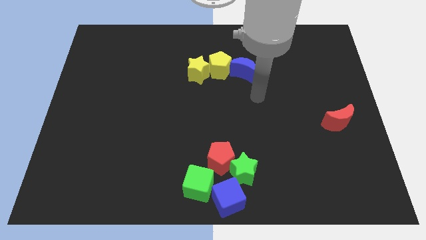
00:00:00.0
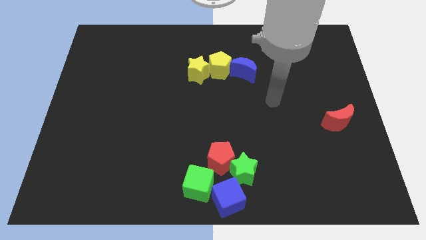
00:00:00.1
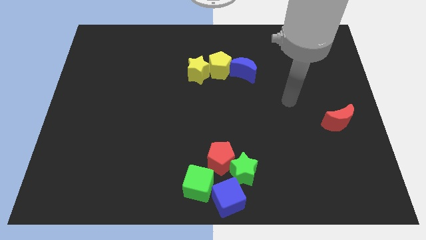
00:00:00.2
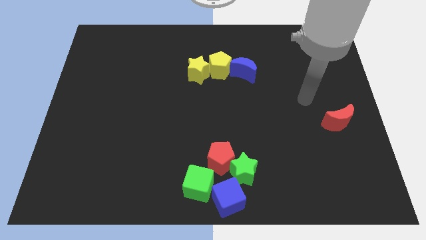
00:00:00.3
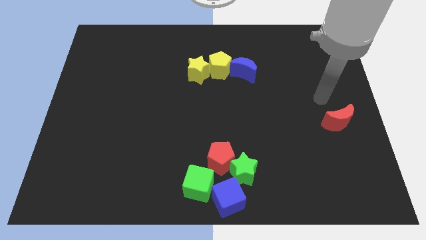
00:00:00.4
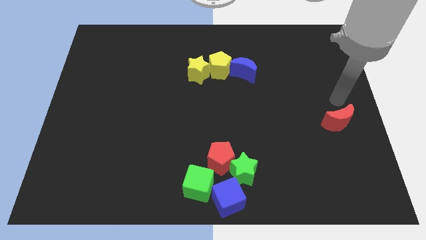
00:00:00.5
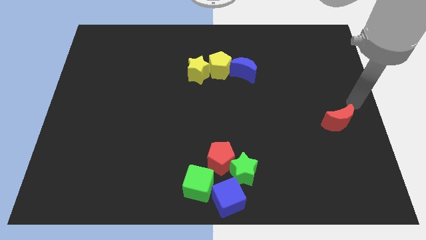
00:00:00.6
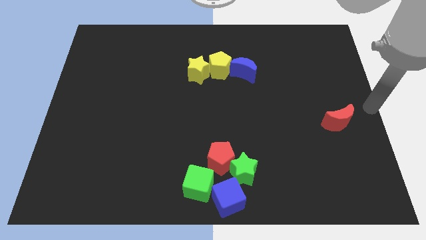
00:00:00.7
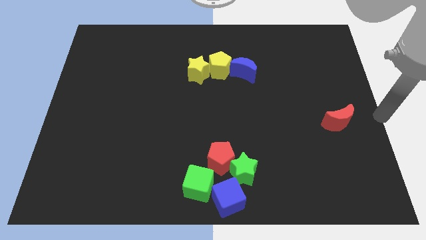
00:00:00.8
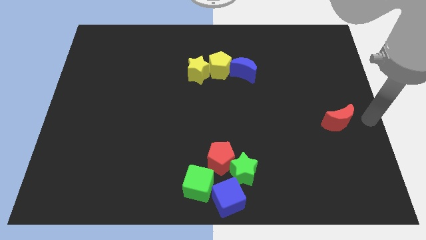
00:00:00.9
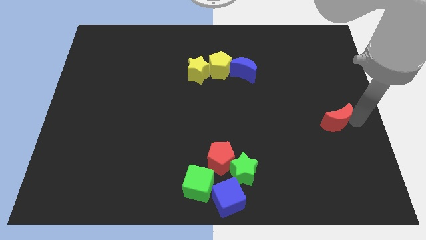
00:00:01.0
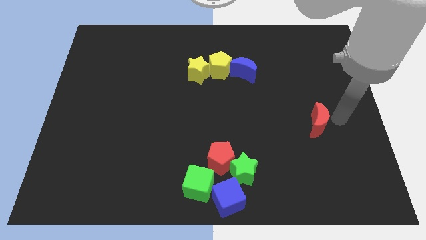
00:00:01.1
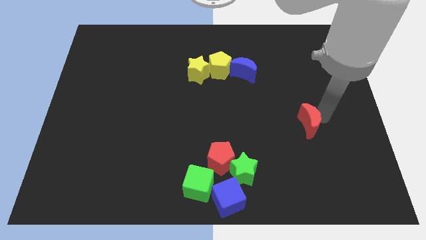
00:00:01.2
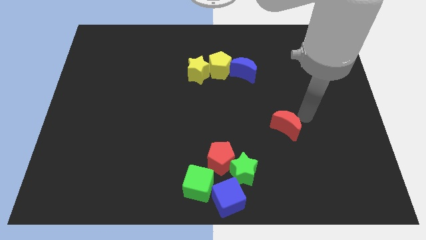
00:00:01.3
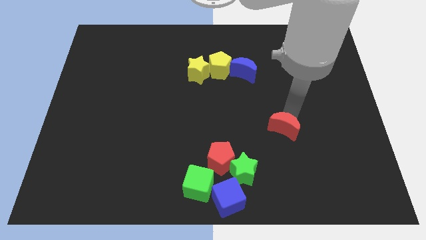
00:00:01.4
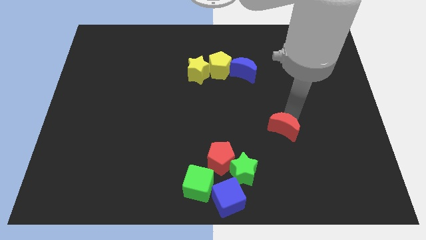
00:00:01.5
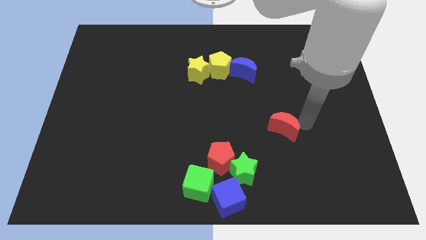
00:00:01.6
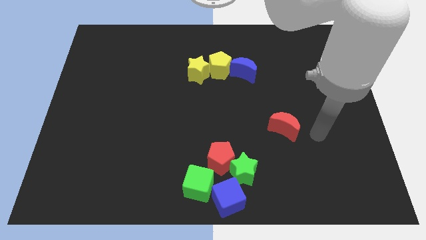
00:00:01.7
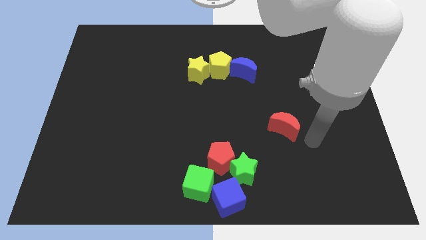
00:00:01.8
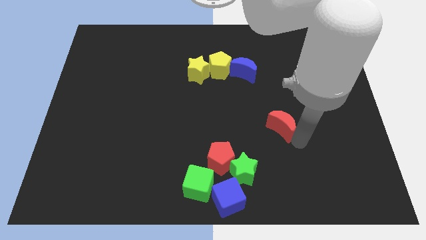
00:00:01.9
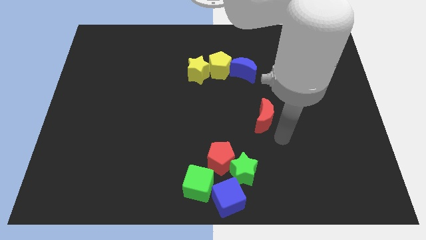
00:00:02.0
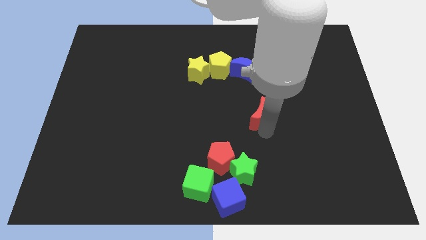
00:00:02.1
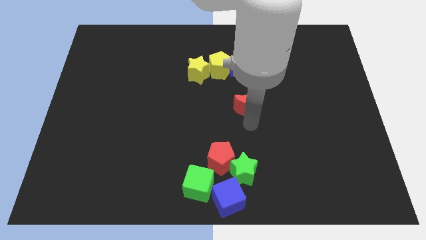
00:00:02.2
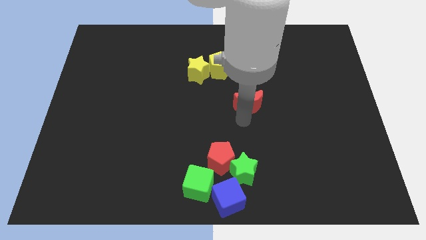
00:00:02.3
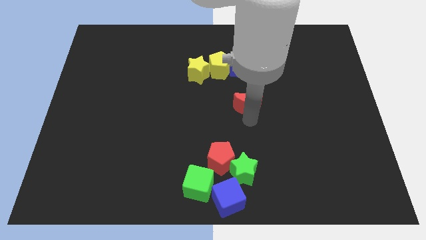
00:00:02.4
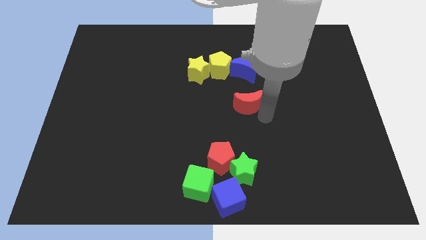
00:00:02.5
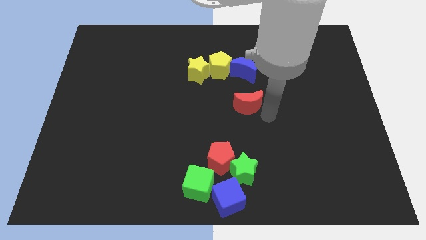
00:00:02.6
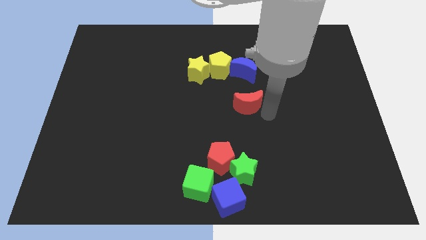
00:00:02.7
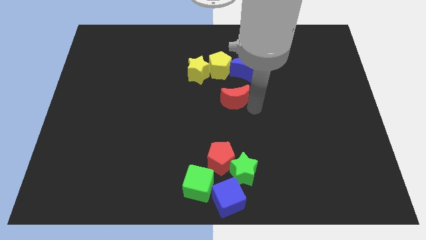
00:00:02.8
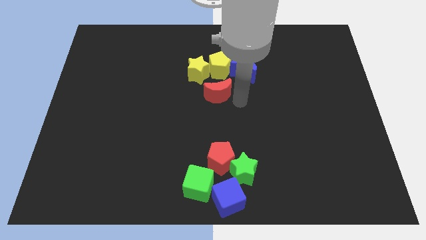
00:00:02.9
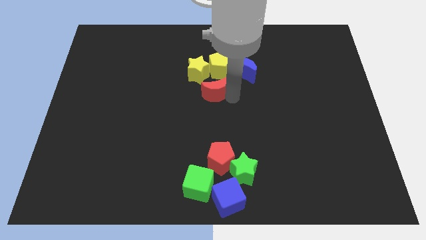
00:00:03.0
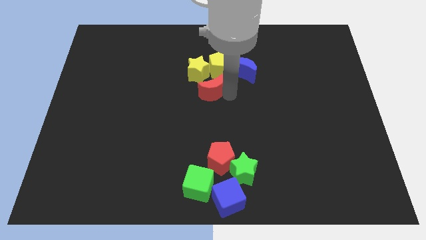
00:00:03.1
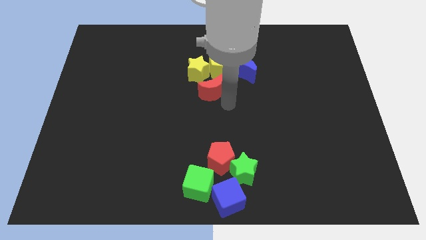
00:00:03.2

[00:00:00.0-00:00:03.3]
push the red moon to the bottom of the yellow pentagon

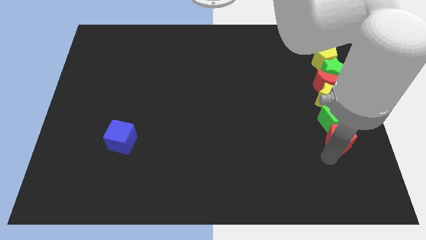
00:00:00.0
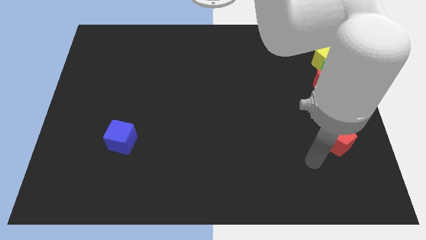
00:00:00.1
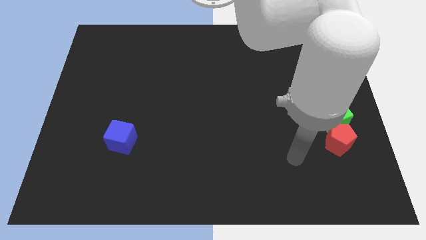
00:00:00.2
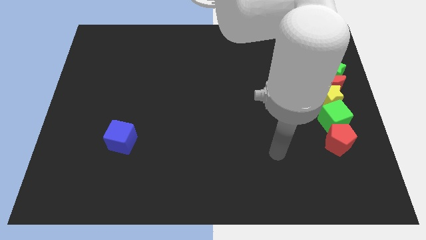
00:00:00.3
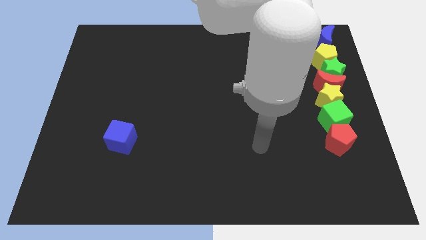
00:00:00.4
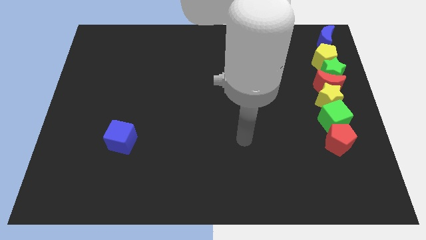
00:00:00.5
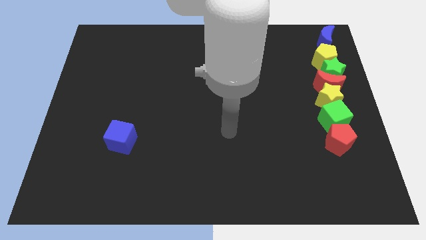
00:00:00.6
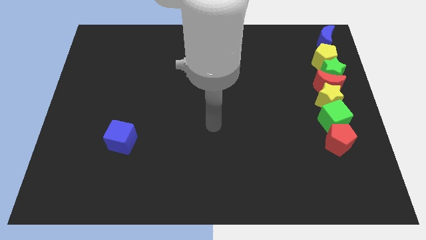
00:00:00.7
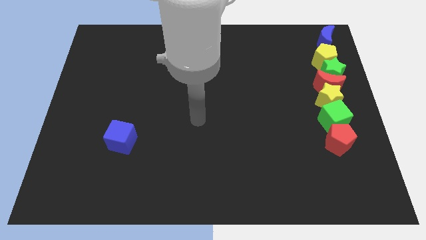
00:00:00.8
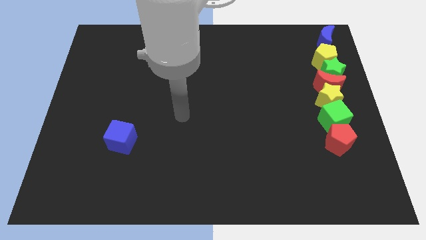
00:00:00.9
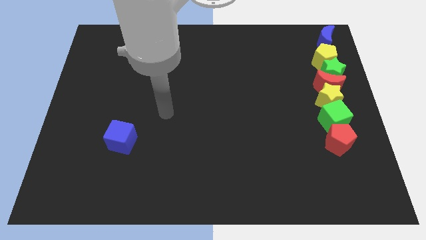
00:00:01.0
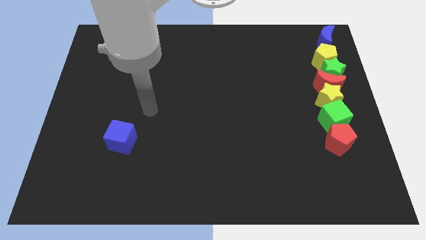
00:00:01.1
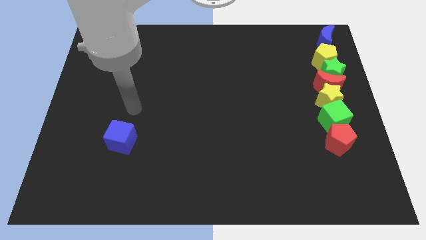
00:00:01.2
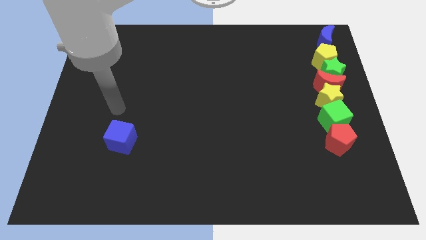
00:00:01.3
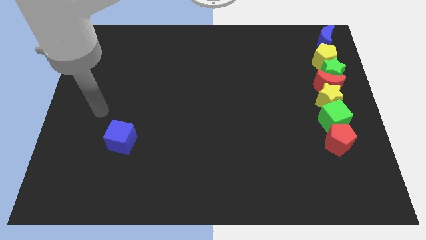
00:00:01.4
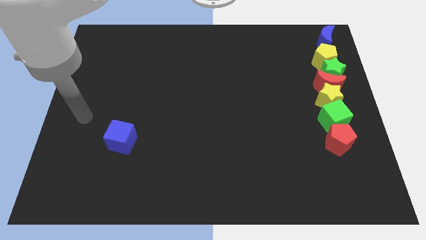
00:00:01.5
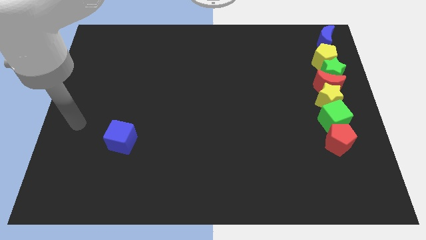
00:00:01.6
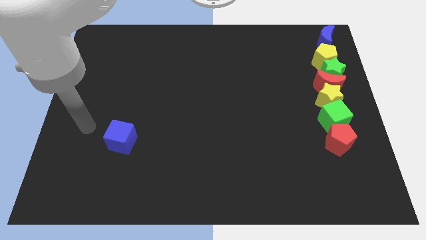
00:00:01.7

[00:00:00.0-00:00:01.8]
move away from the red pentagon

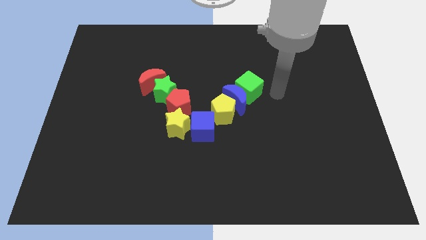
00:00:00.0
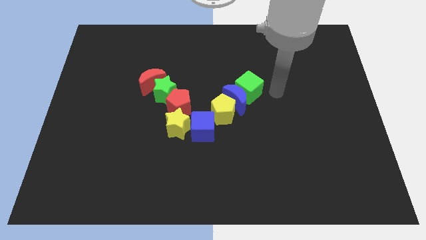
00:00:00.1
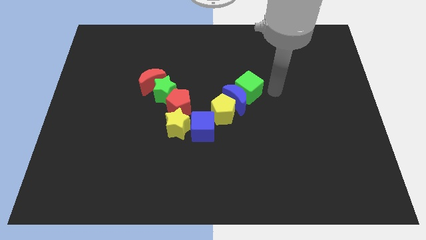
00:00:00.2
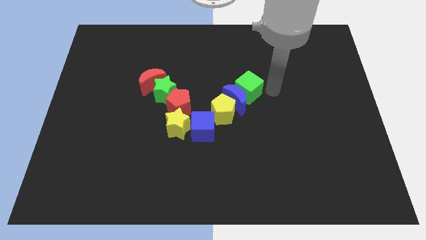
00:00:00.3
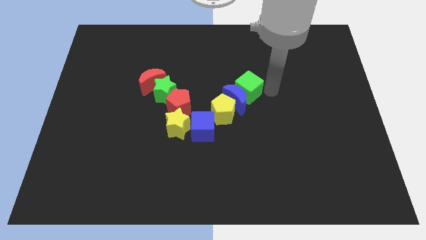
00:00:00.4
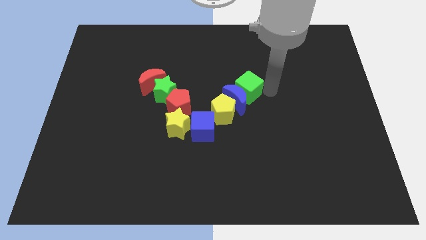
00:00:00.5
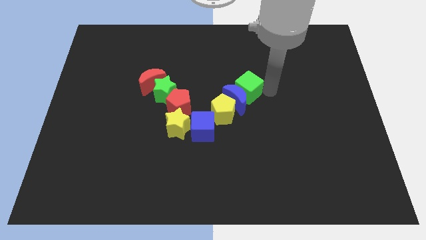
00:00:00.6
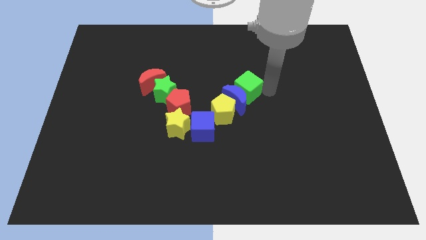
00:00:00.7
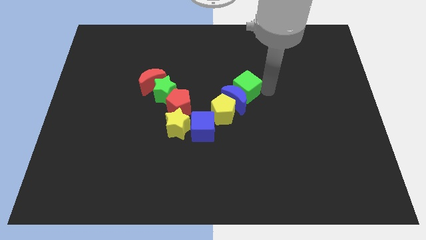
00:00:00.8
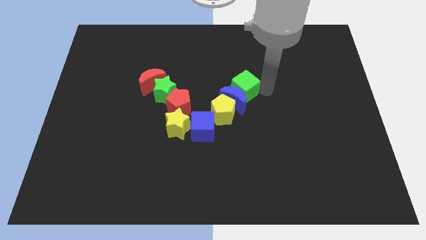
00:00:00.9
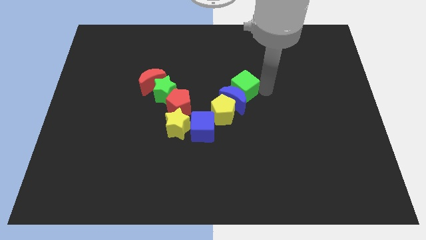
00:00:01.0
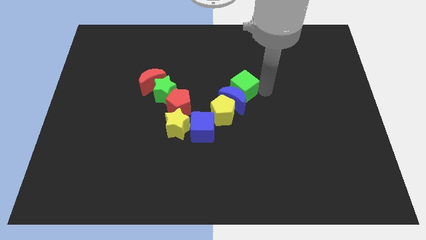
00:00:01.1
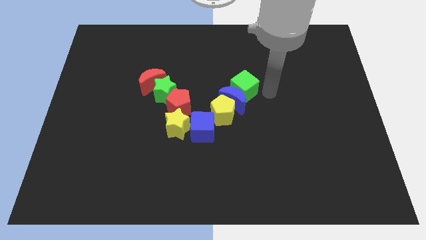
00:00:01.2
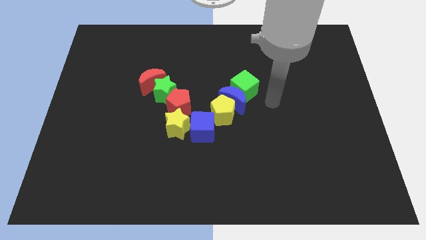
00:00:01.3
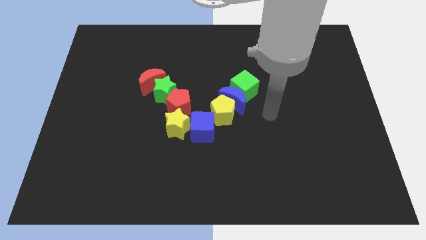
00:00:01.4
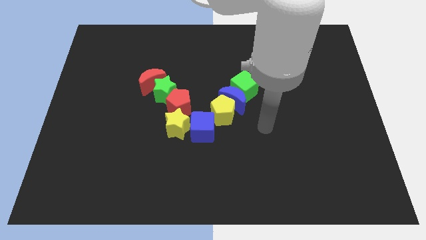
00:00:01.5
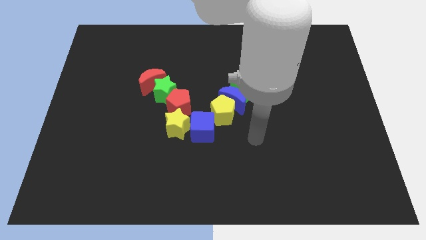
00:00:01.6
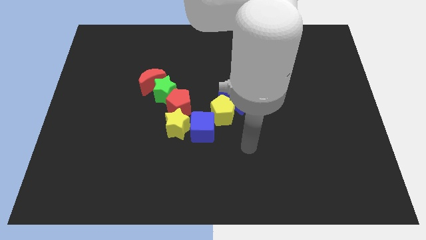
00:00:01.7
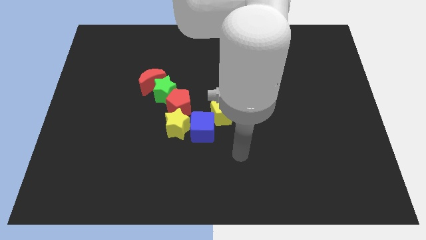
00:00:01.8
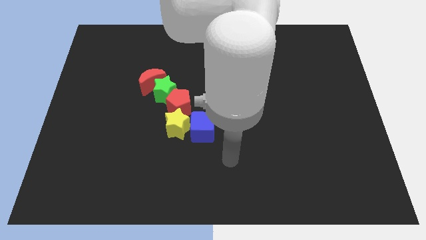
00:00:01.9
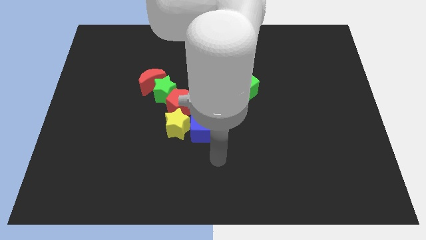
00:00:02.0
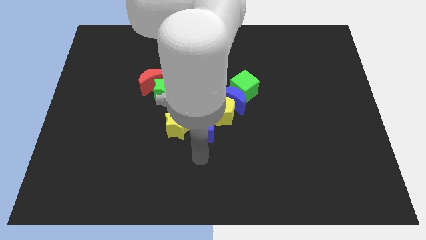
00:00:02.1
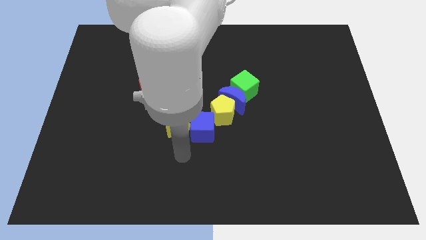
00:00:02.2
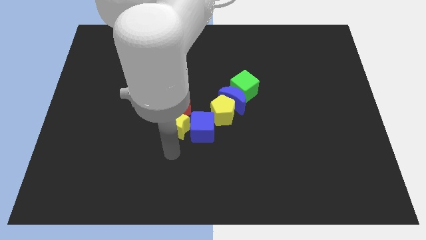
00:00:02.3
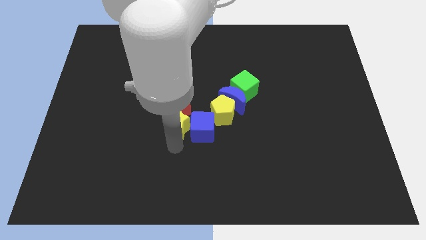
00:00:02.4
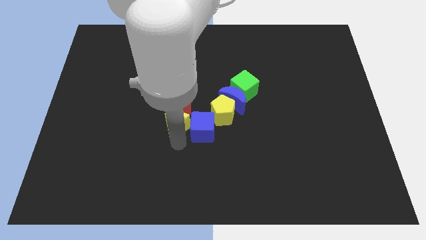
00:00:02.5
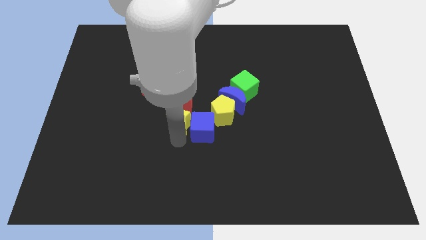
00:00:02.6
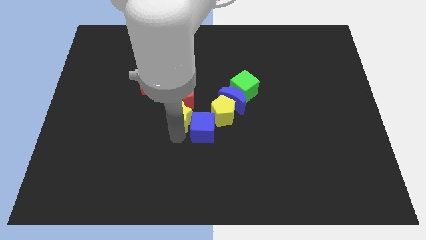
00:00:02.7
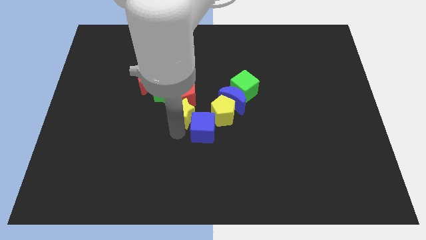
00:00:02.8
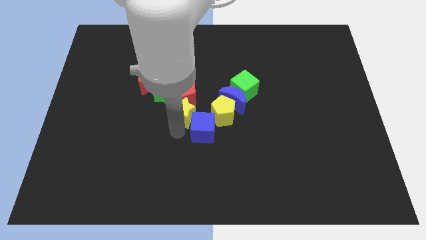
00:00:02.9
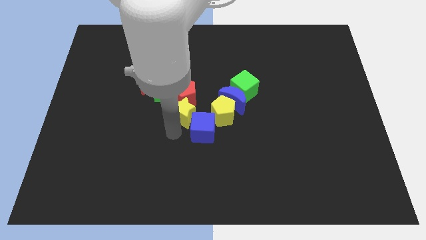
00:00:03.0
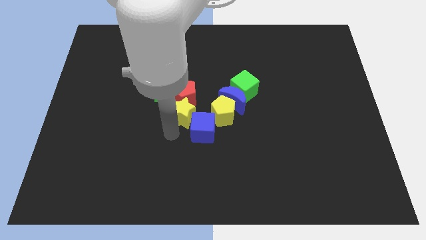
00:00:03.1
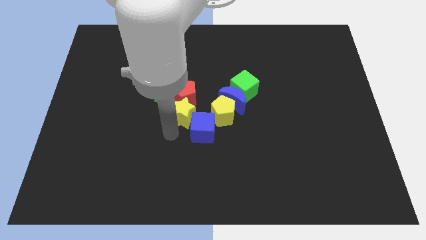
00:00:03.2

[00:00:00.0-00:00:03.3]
move your arm to the center of the board

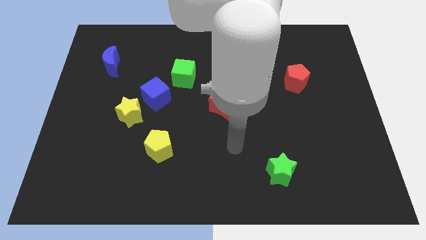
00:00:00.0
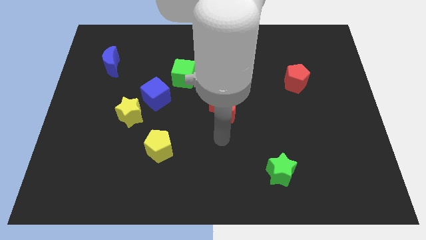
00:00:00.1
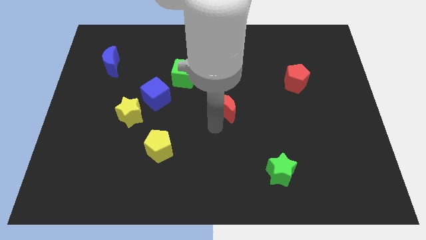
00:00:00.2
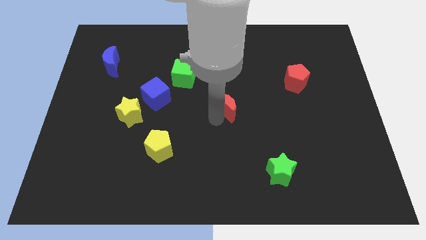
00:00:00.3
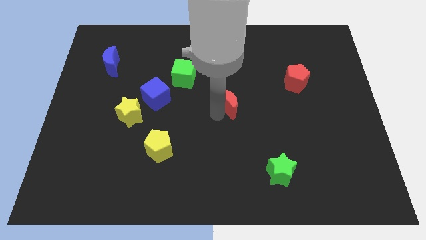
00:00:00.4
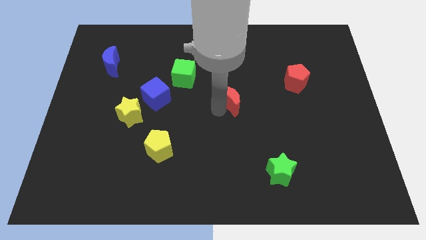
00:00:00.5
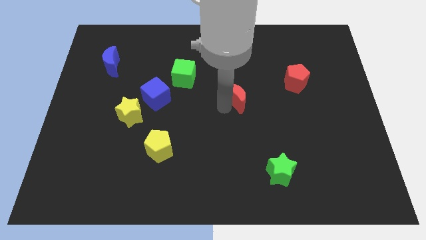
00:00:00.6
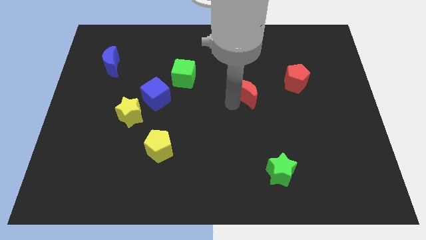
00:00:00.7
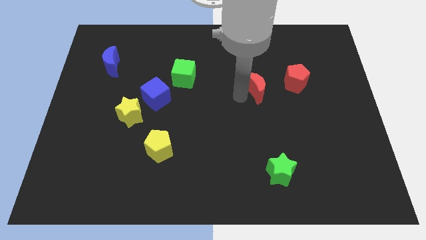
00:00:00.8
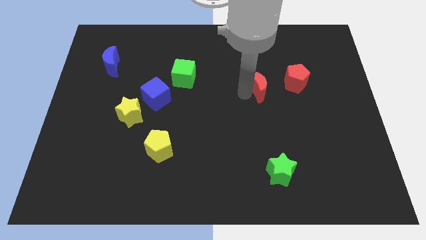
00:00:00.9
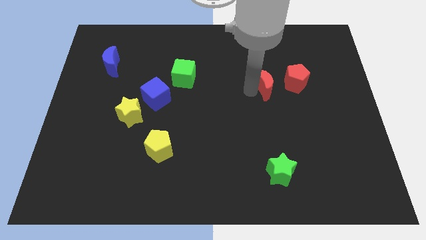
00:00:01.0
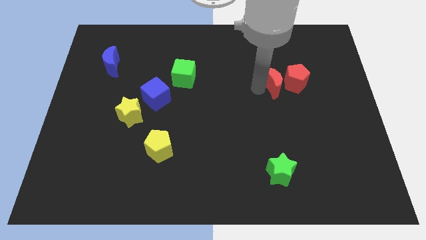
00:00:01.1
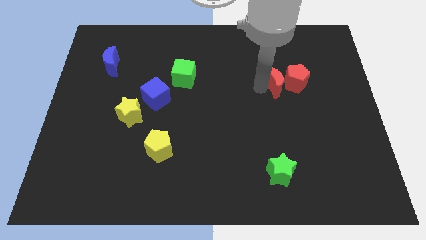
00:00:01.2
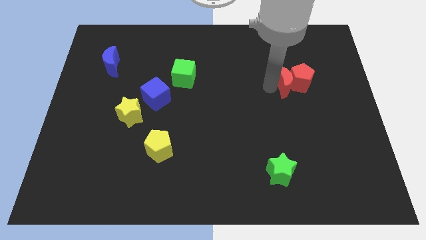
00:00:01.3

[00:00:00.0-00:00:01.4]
slide the red crescent into the red pentagon
